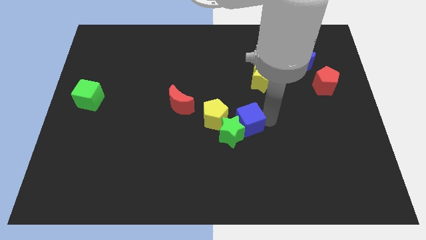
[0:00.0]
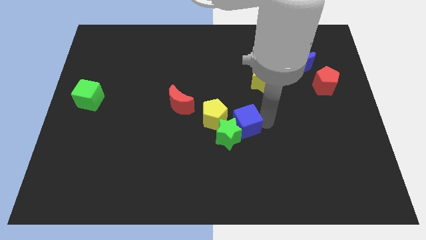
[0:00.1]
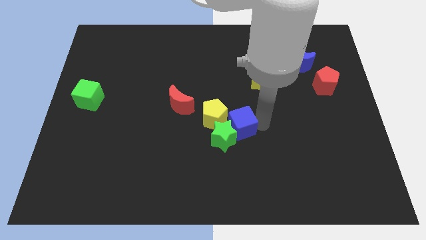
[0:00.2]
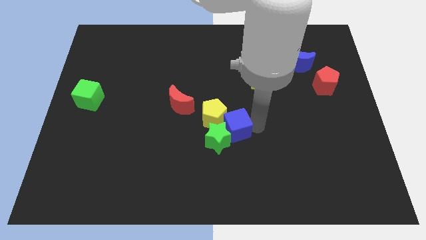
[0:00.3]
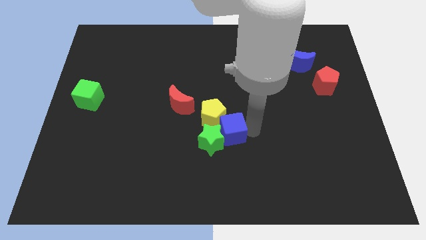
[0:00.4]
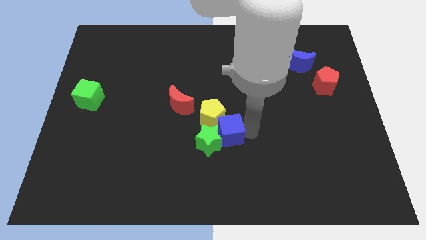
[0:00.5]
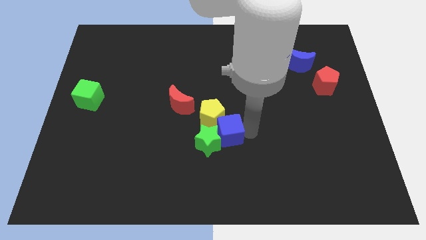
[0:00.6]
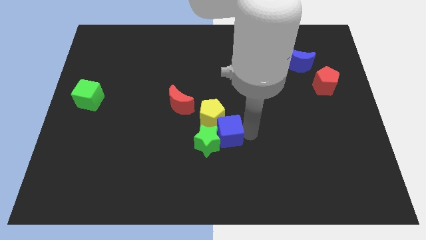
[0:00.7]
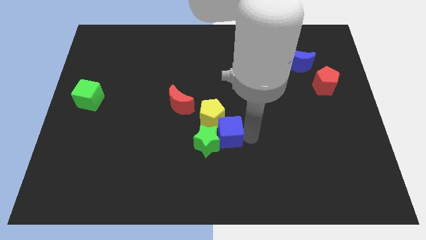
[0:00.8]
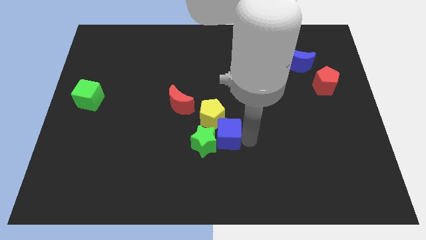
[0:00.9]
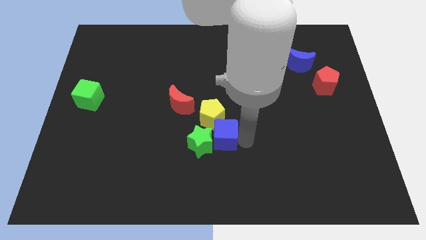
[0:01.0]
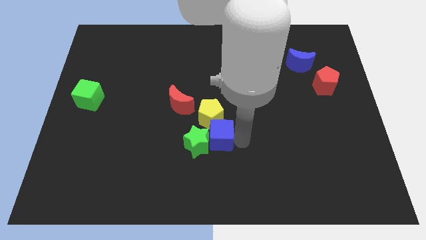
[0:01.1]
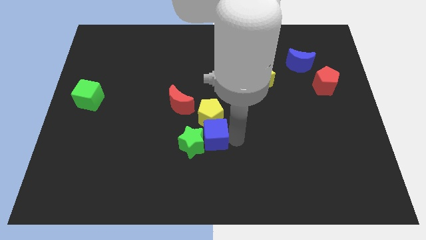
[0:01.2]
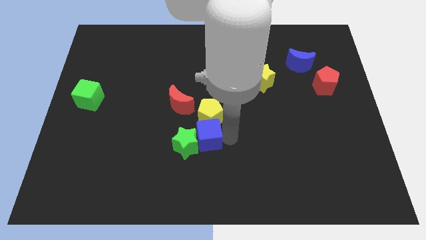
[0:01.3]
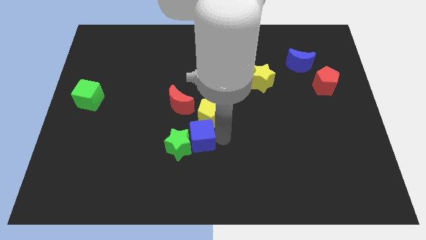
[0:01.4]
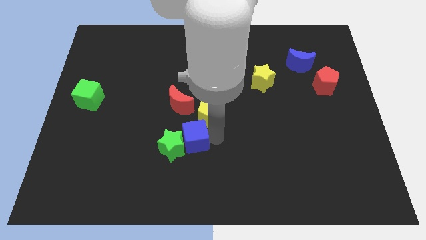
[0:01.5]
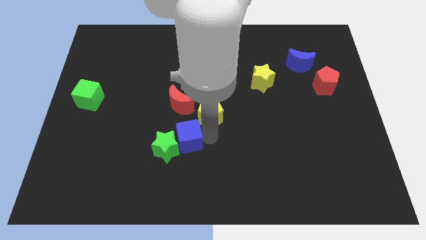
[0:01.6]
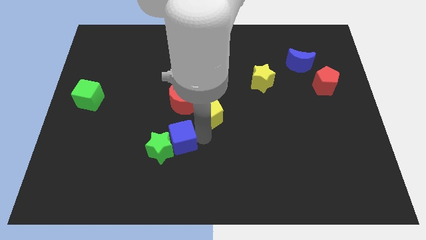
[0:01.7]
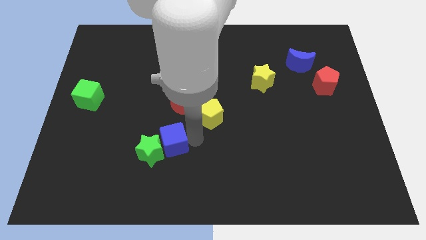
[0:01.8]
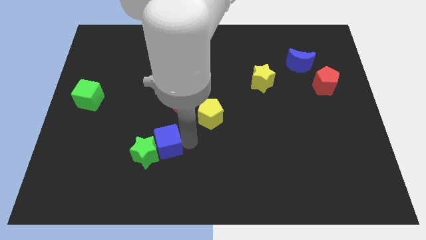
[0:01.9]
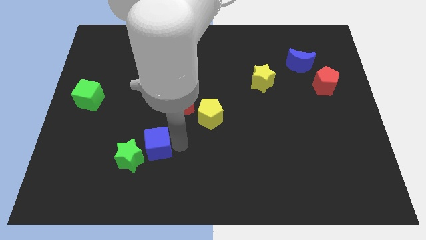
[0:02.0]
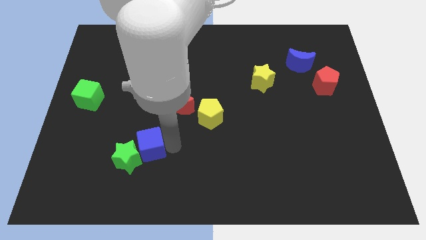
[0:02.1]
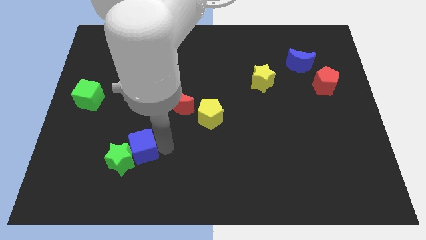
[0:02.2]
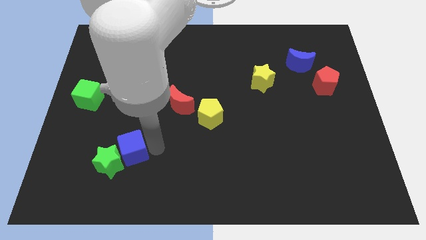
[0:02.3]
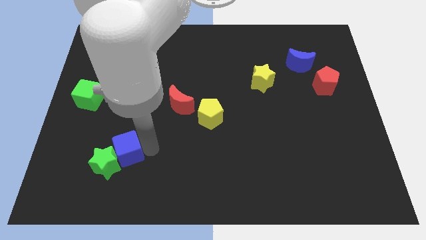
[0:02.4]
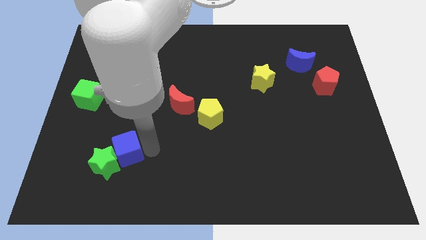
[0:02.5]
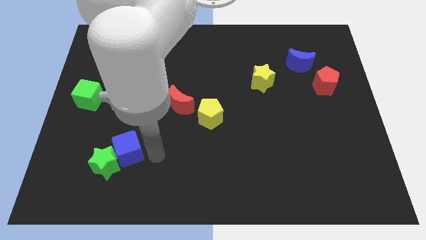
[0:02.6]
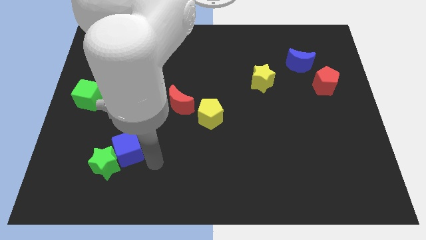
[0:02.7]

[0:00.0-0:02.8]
push the green star with a blue cube towards the bottom left of the board

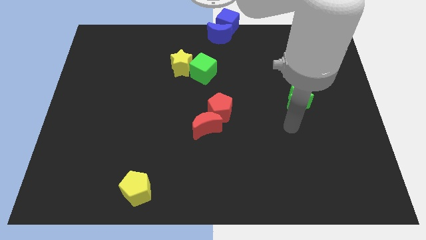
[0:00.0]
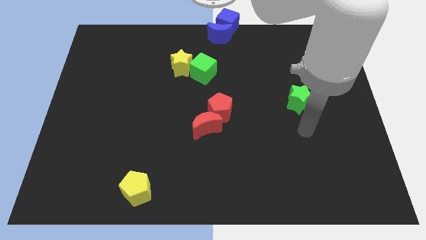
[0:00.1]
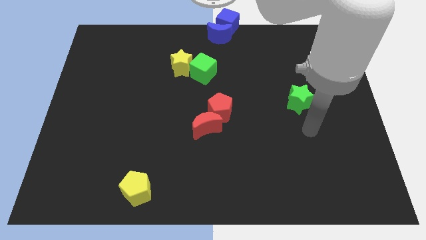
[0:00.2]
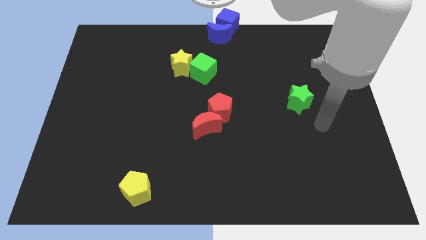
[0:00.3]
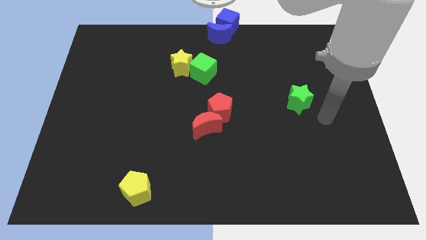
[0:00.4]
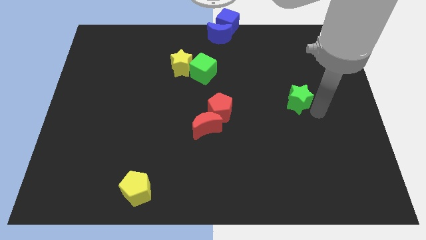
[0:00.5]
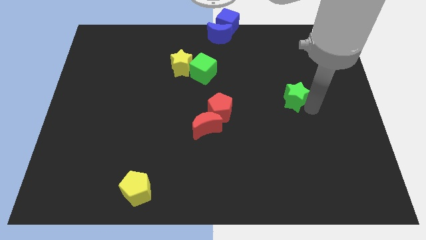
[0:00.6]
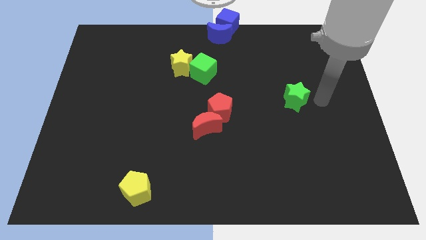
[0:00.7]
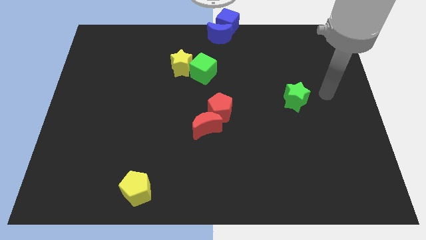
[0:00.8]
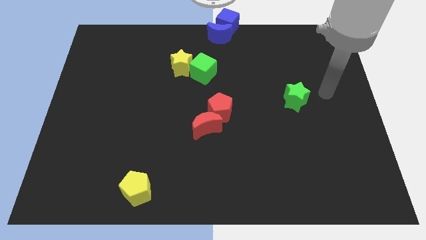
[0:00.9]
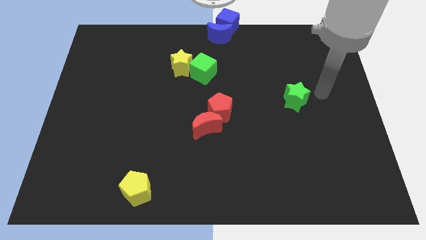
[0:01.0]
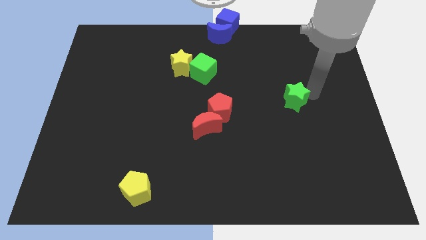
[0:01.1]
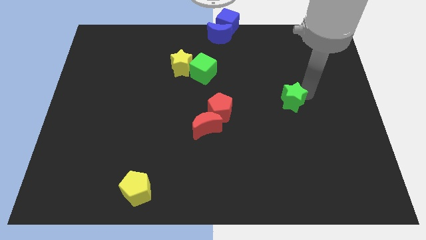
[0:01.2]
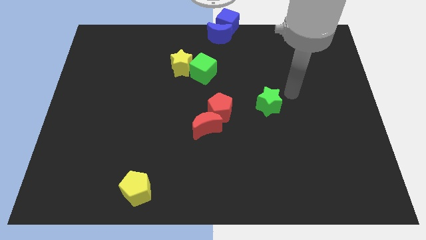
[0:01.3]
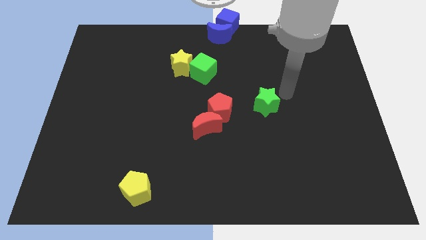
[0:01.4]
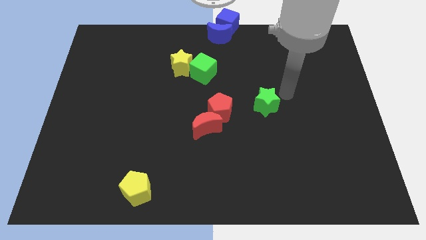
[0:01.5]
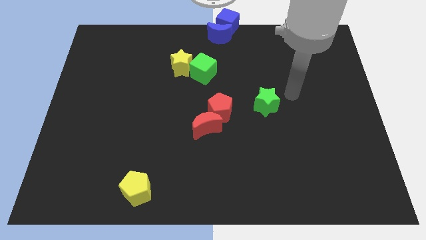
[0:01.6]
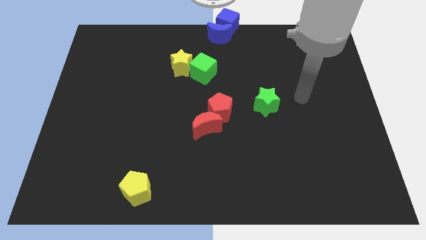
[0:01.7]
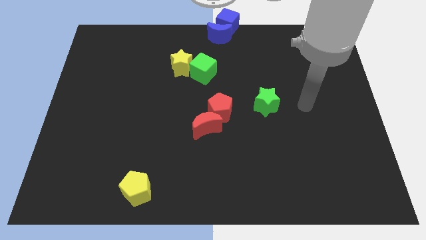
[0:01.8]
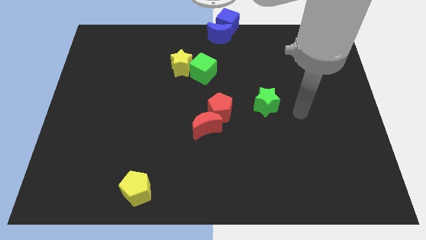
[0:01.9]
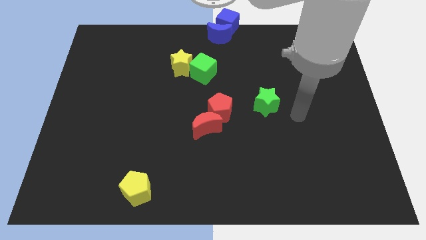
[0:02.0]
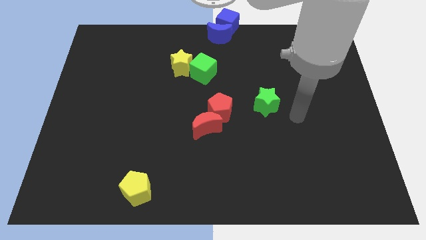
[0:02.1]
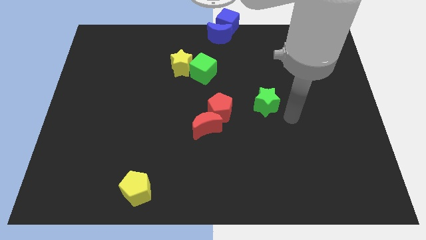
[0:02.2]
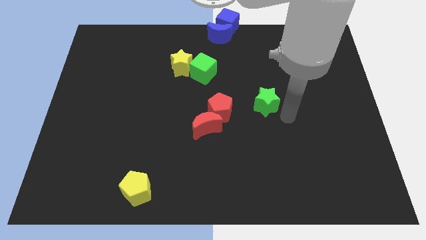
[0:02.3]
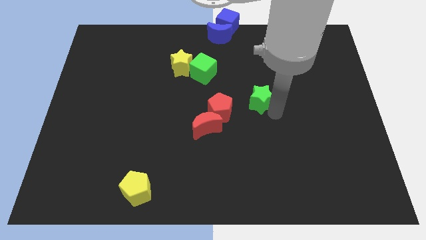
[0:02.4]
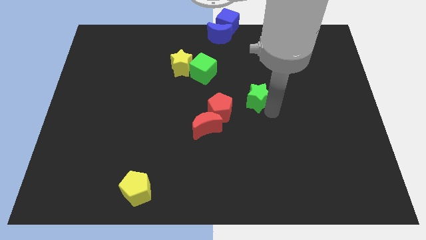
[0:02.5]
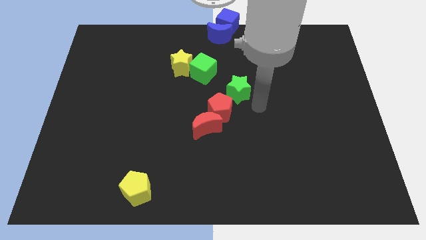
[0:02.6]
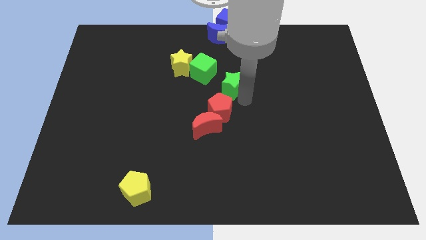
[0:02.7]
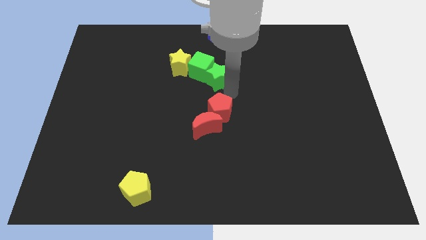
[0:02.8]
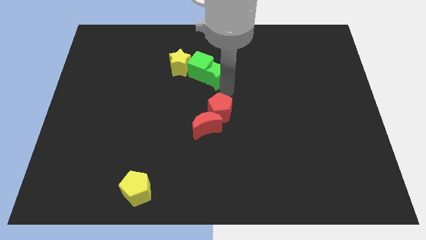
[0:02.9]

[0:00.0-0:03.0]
push green star in to green cube

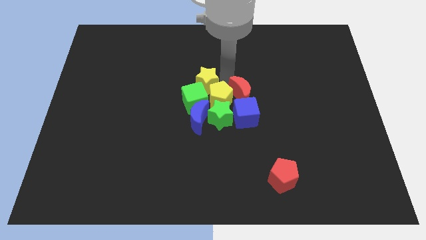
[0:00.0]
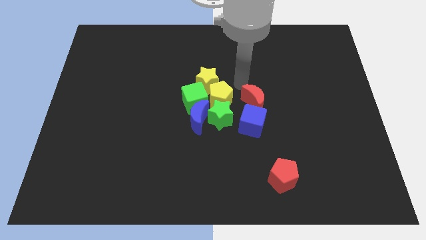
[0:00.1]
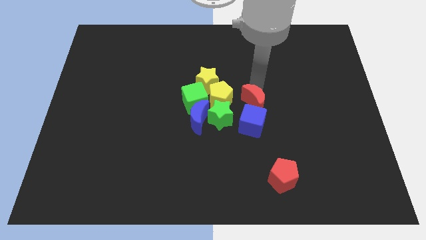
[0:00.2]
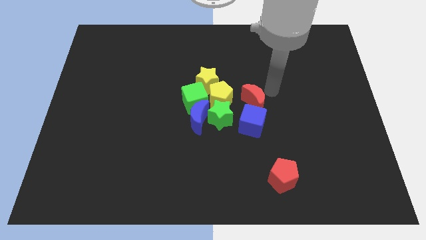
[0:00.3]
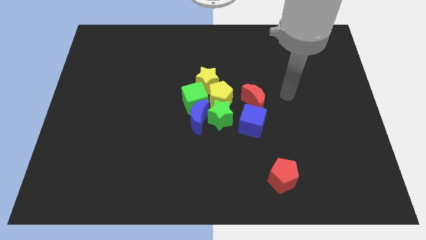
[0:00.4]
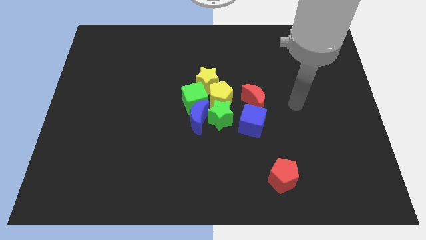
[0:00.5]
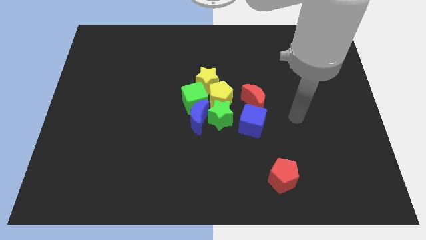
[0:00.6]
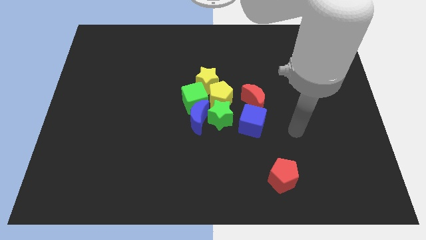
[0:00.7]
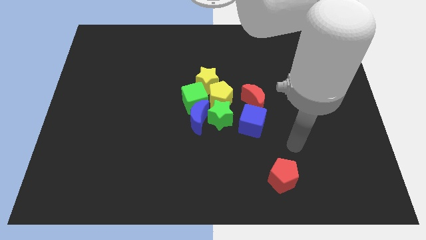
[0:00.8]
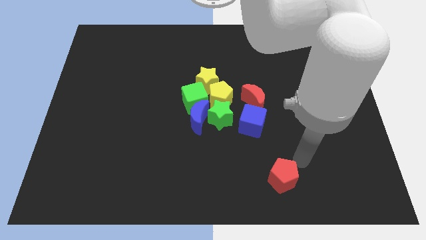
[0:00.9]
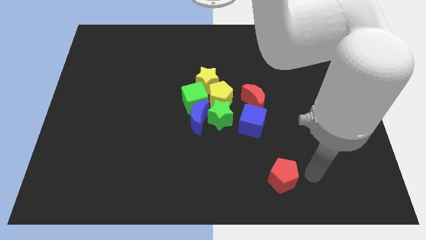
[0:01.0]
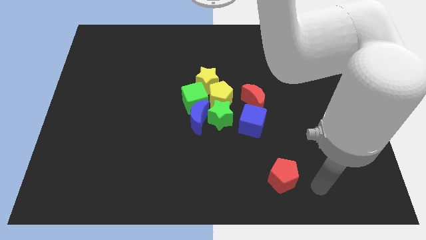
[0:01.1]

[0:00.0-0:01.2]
separate the red moon and blue cube from the group of blocks

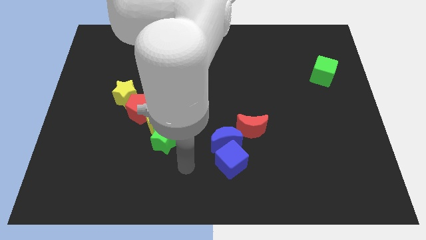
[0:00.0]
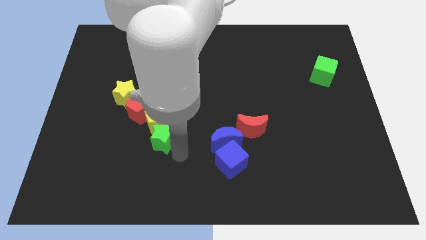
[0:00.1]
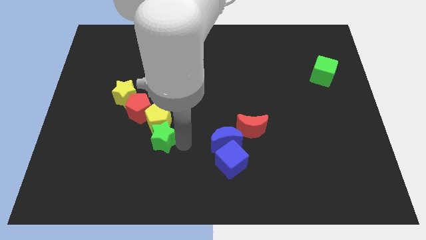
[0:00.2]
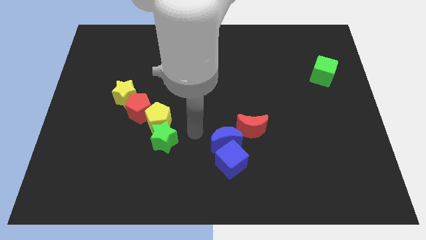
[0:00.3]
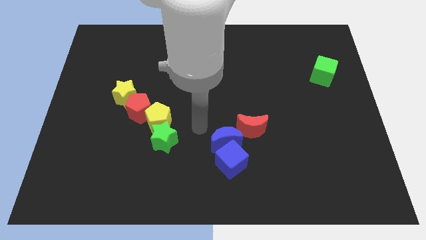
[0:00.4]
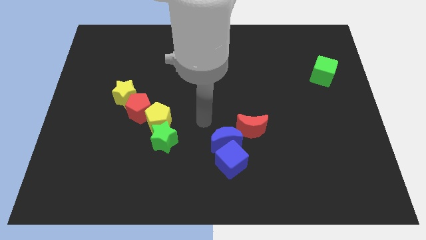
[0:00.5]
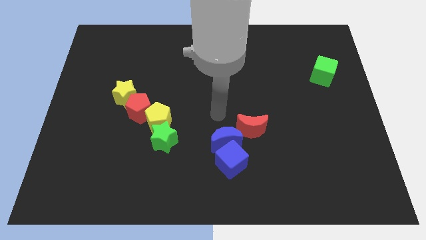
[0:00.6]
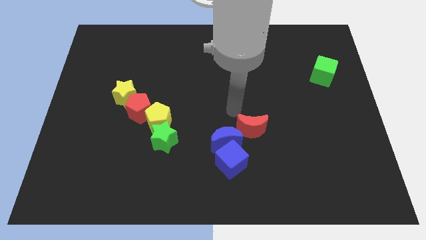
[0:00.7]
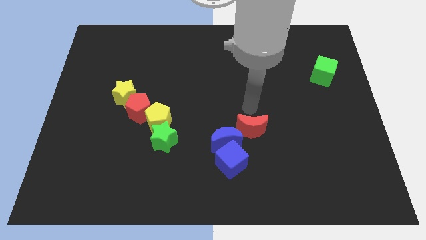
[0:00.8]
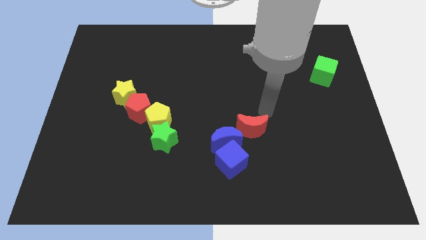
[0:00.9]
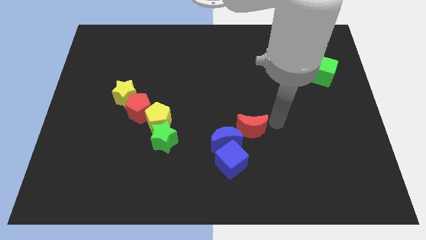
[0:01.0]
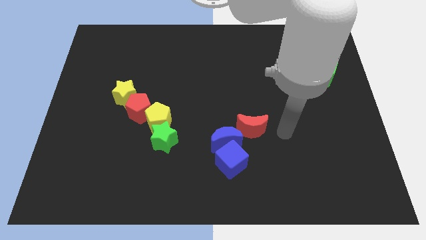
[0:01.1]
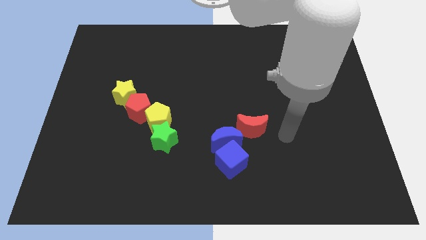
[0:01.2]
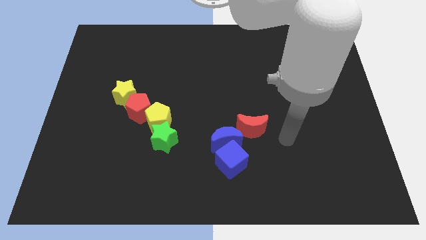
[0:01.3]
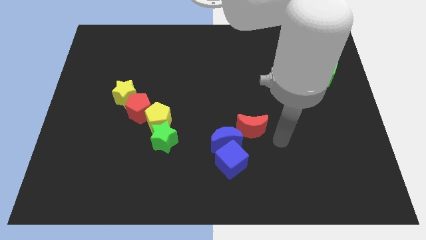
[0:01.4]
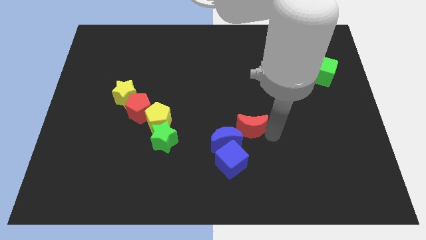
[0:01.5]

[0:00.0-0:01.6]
move your arm towards the red moon

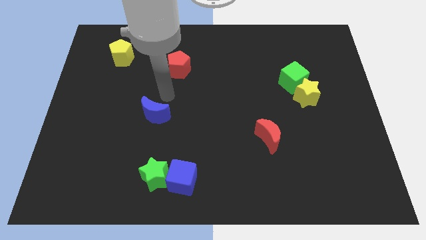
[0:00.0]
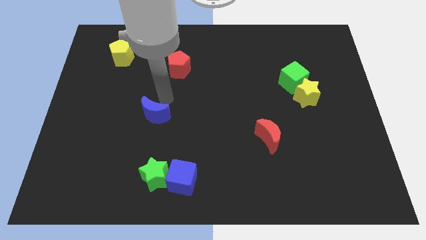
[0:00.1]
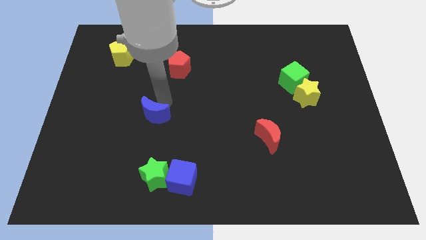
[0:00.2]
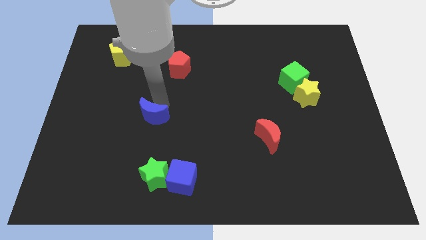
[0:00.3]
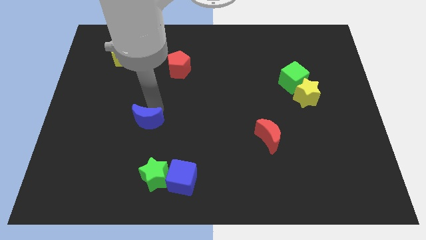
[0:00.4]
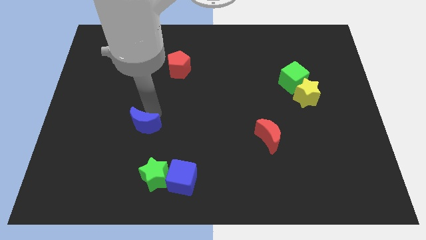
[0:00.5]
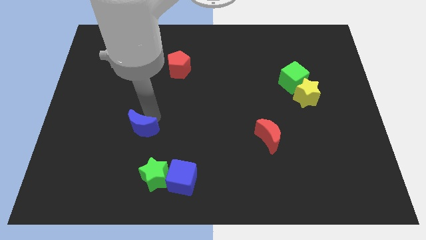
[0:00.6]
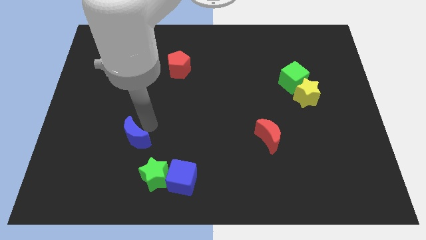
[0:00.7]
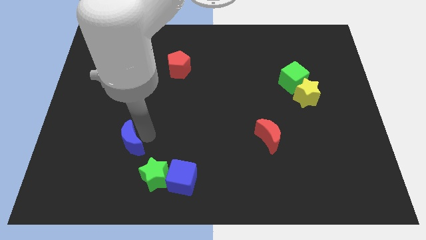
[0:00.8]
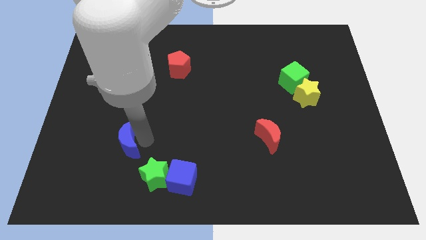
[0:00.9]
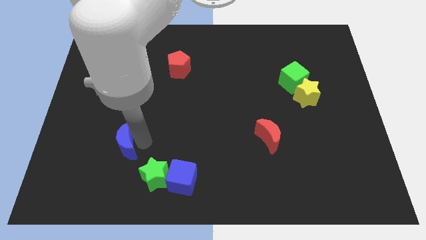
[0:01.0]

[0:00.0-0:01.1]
put the blue crescent at the top left side of the green star
